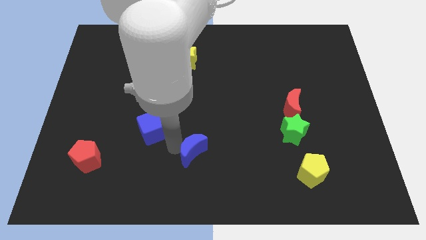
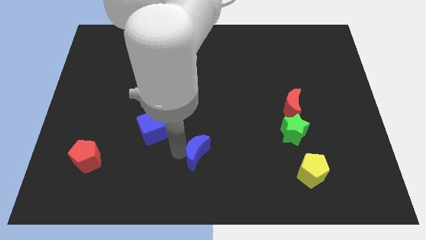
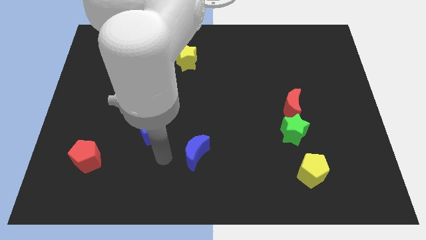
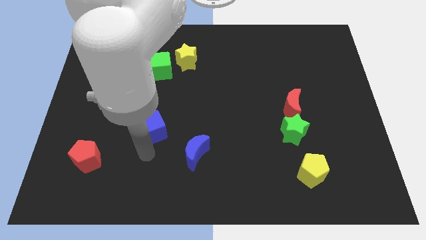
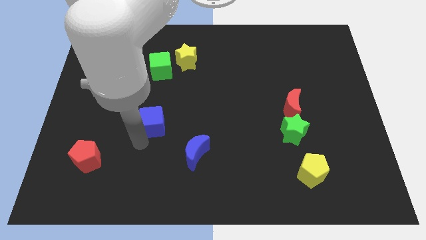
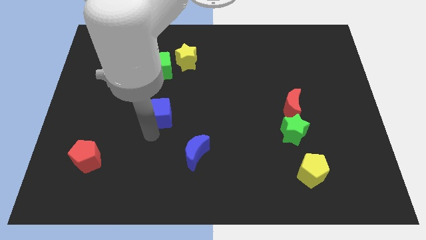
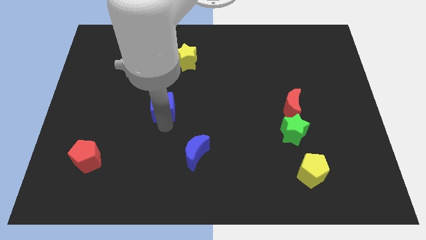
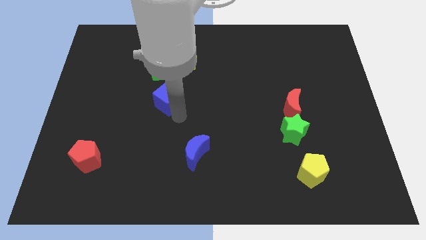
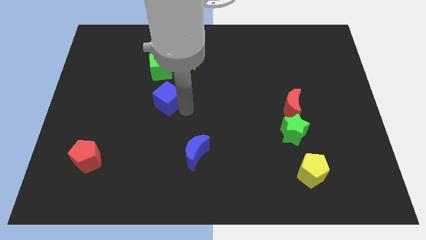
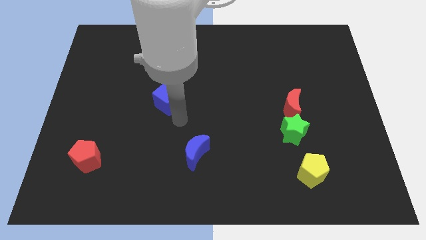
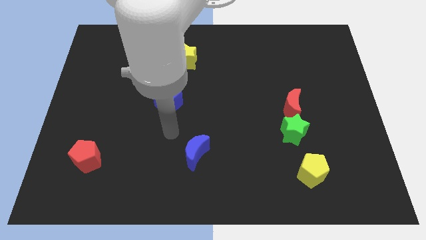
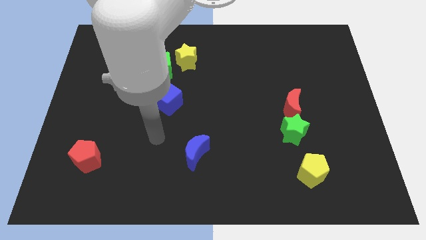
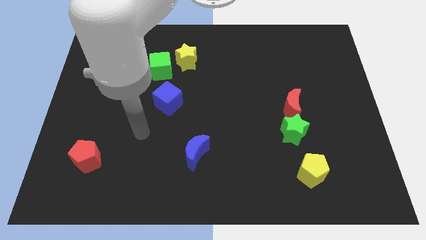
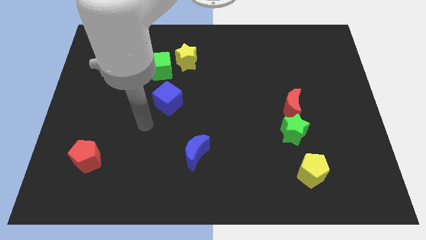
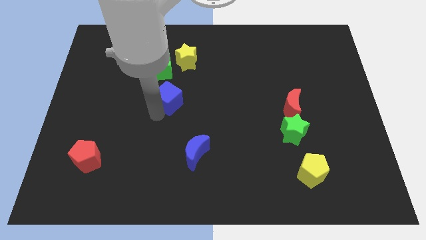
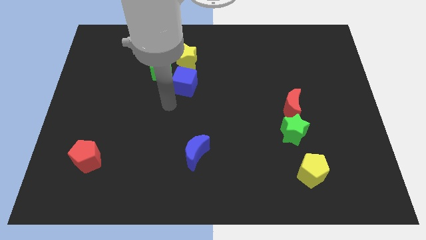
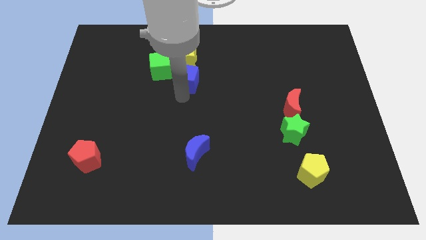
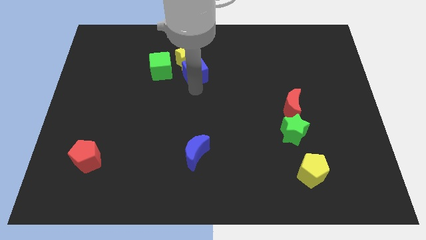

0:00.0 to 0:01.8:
slide the blue cube to the bottom side of the yellow star

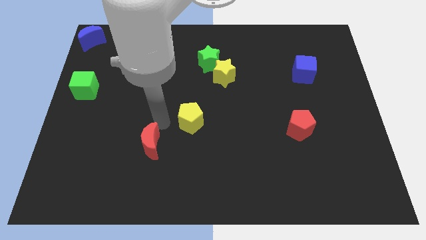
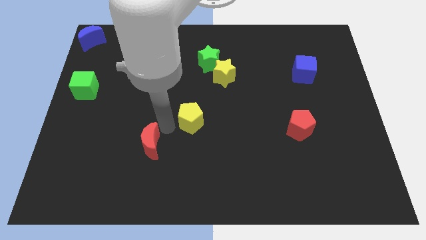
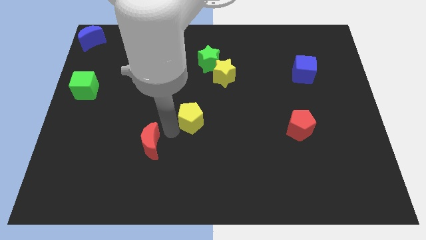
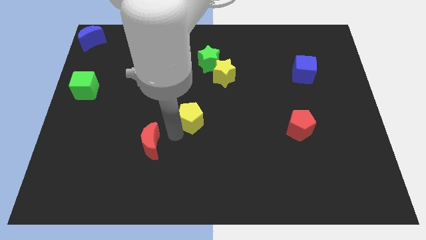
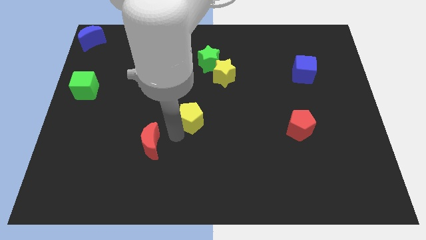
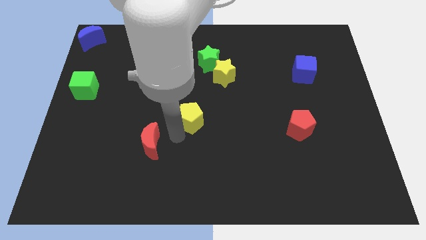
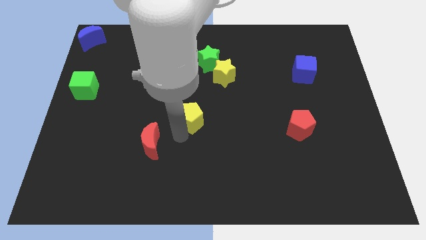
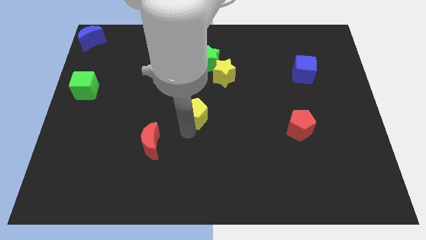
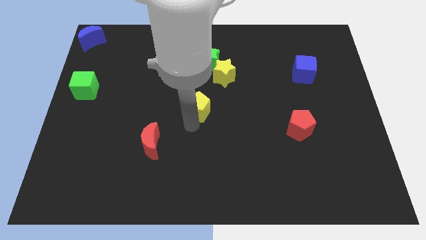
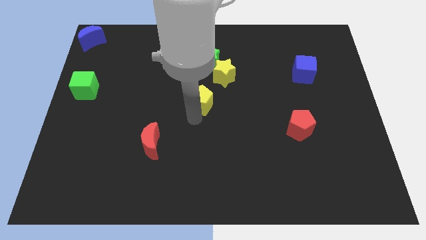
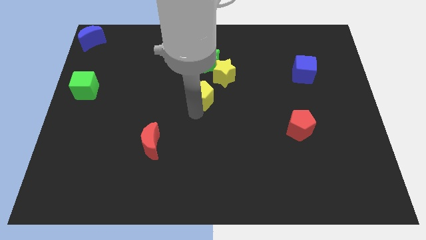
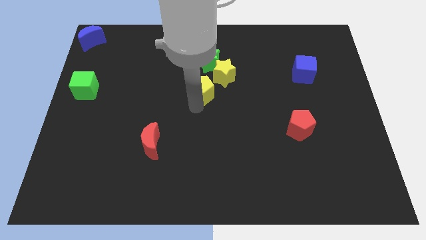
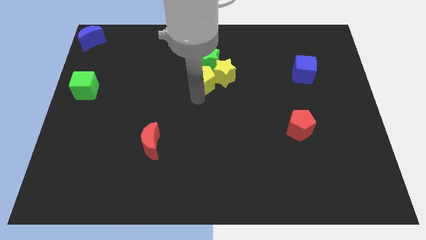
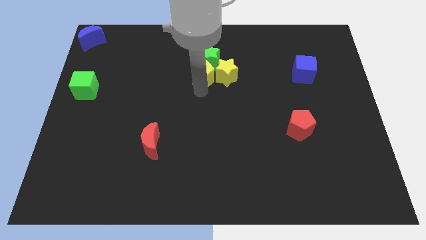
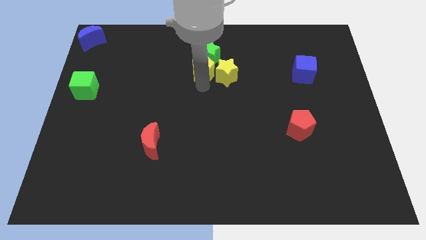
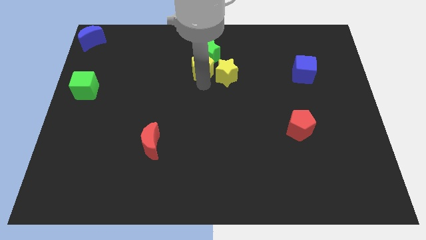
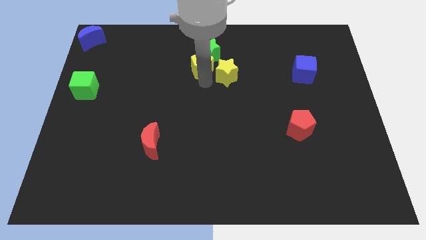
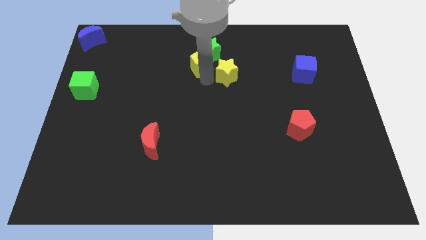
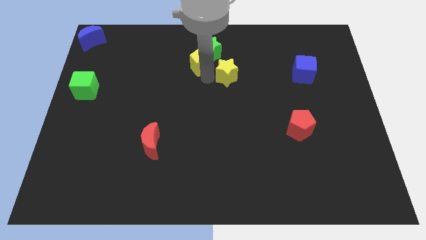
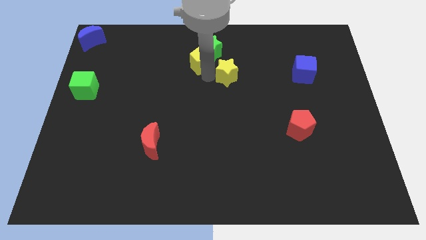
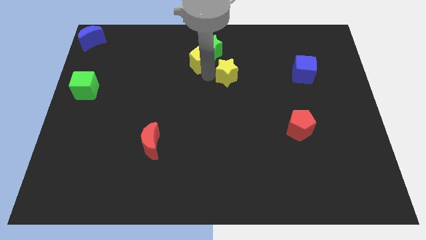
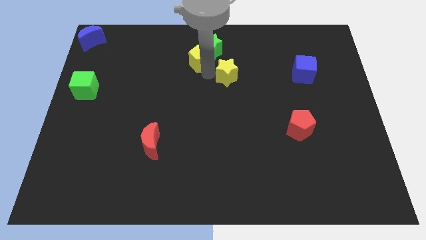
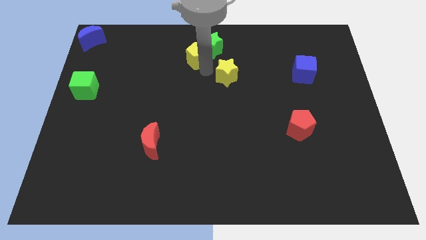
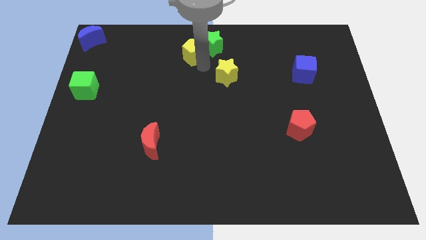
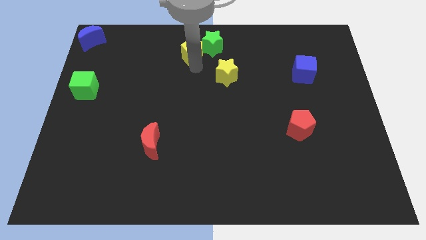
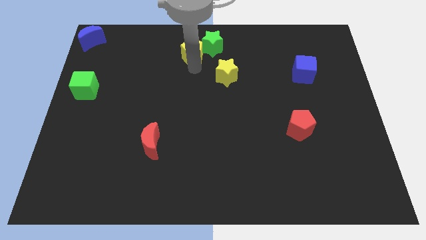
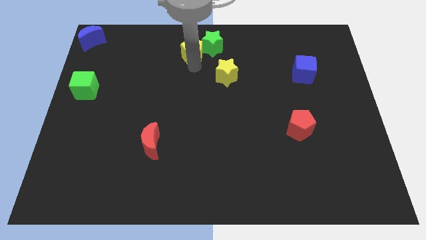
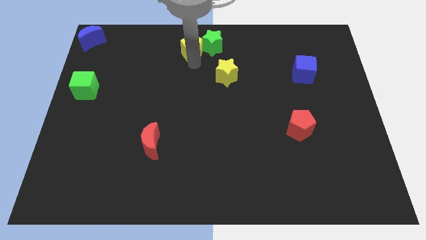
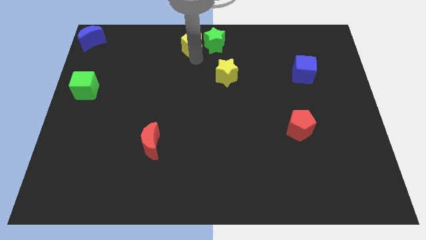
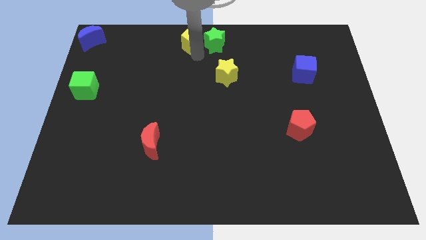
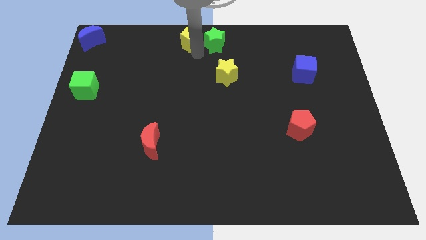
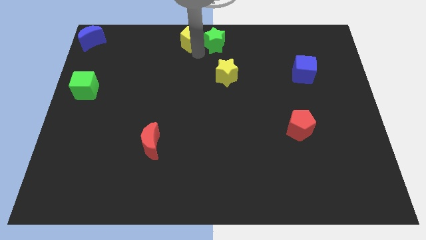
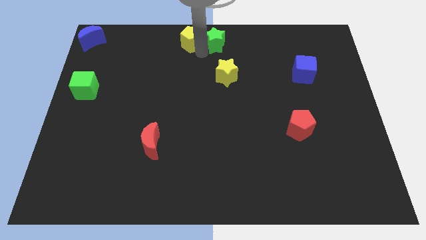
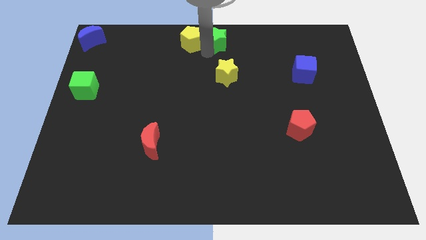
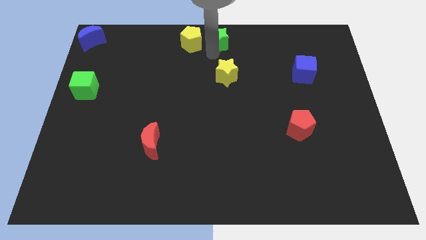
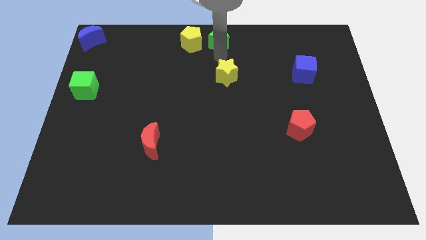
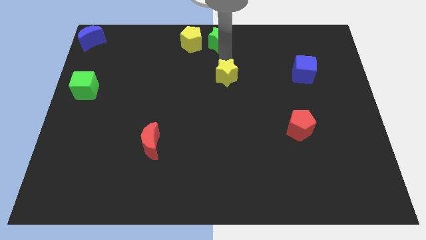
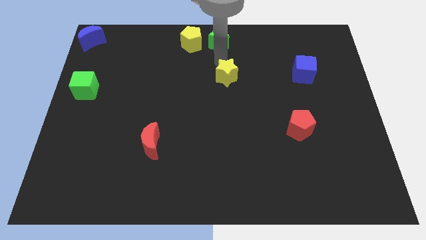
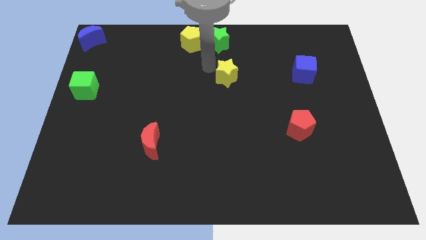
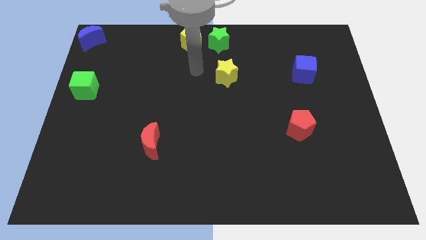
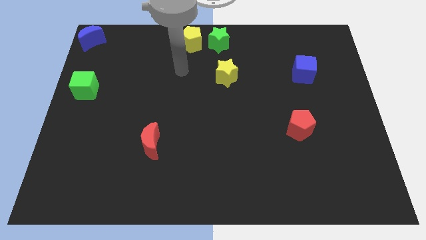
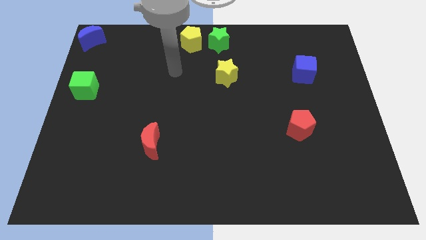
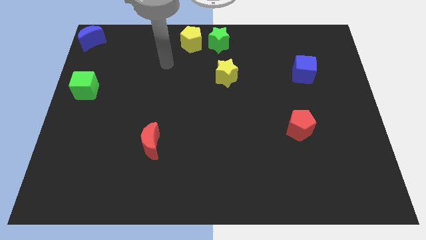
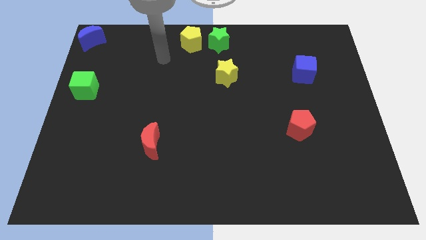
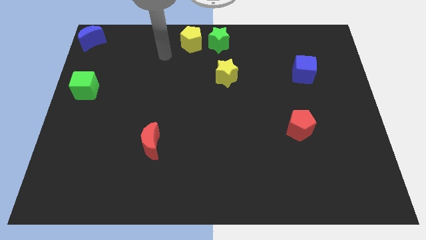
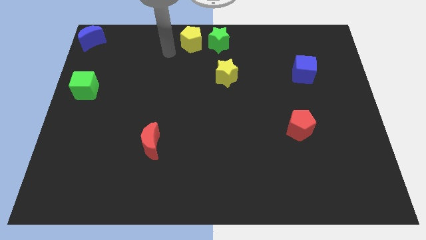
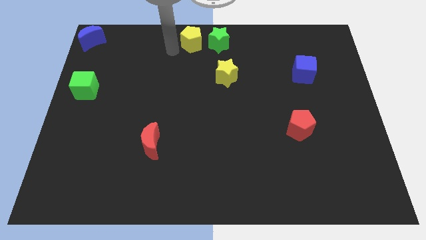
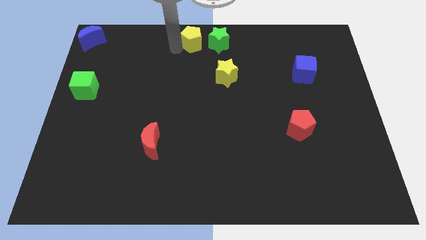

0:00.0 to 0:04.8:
place the green star above the yellow star

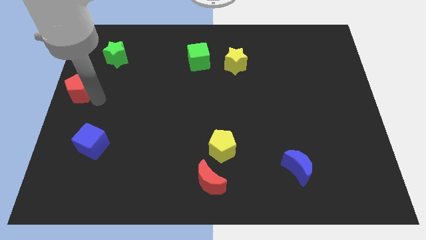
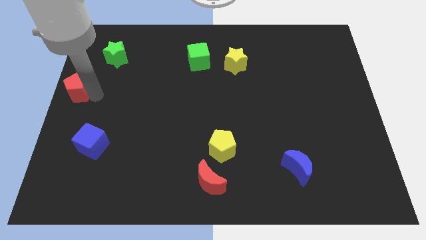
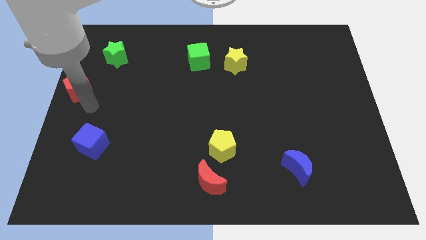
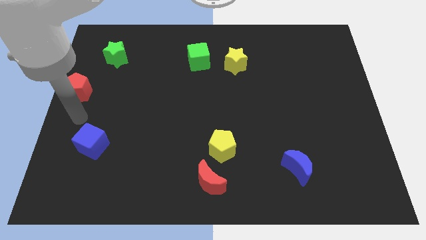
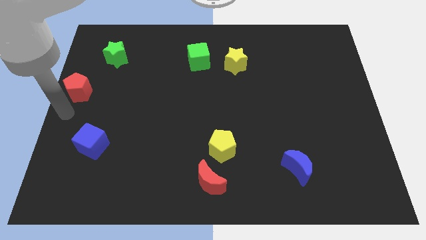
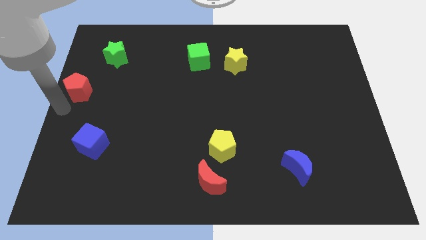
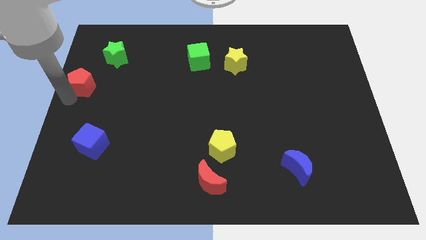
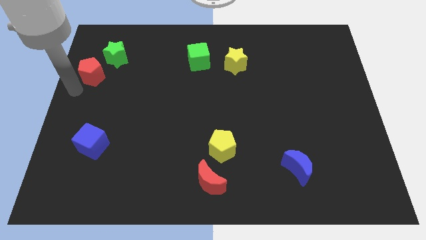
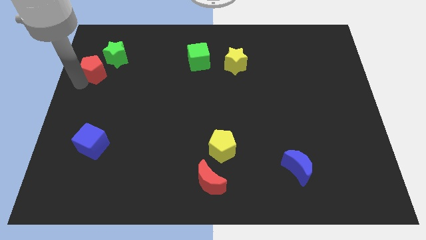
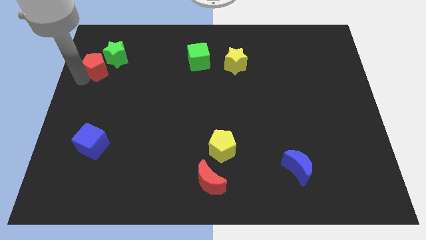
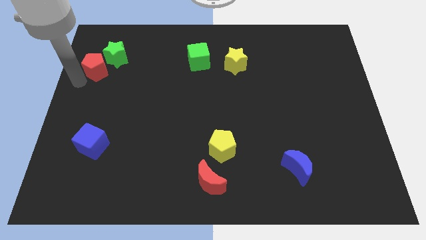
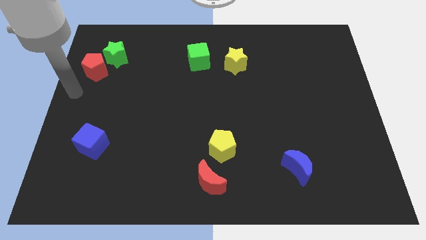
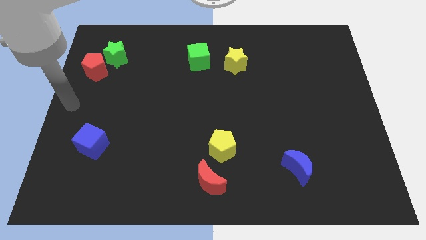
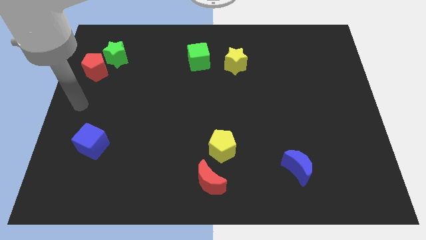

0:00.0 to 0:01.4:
move the red pentagon to the left side of the green star

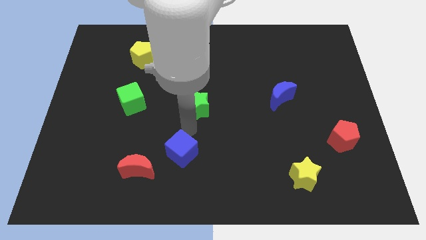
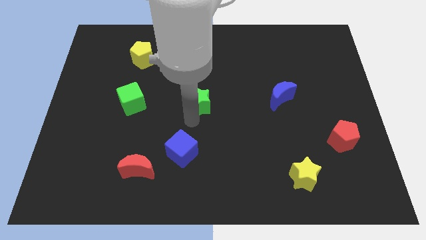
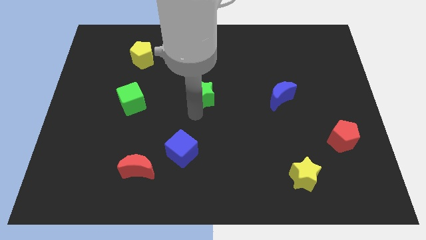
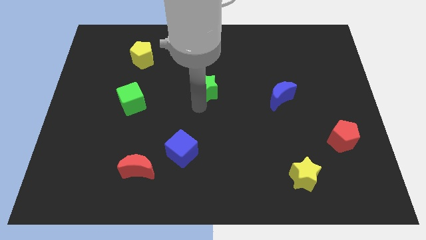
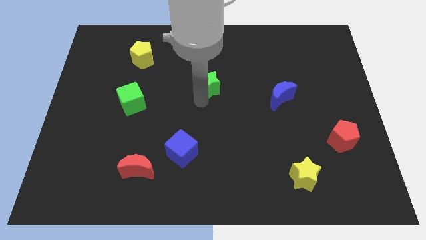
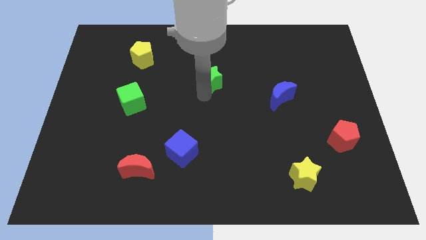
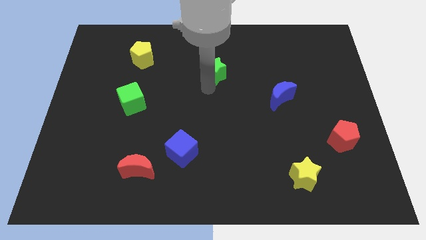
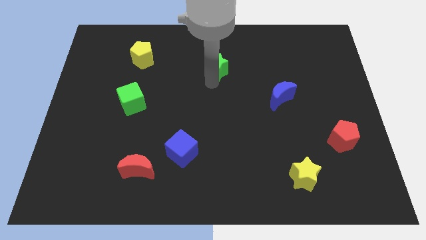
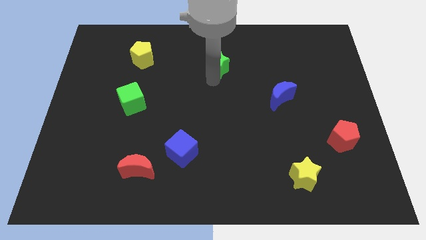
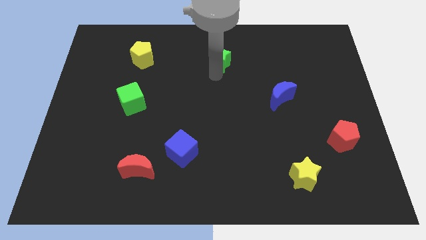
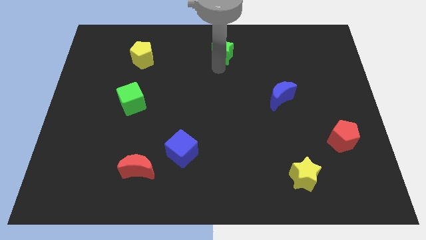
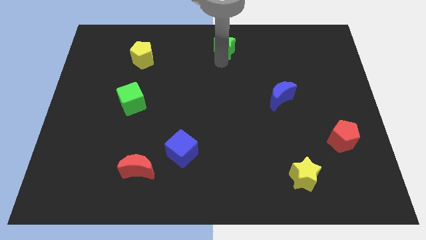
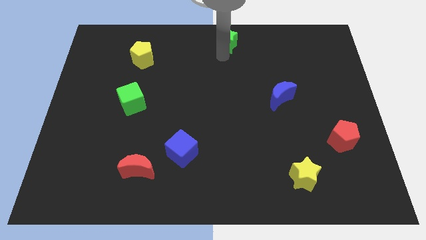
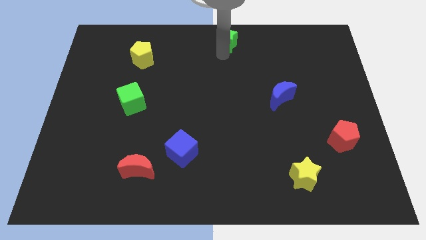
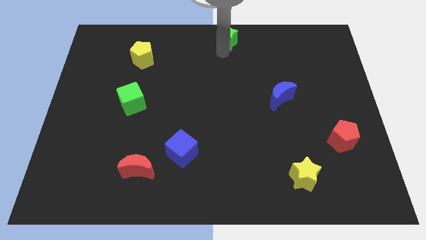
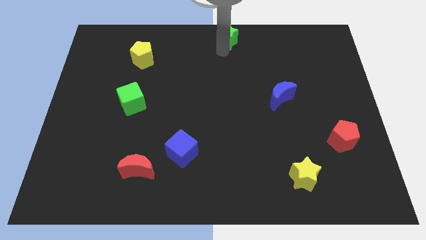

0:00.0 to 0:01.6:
place the green star at top center of the board
